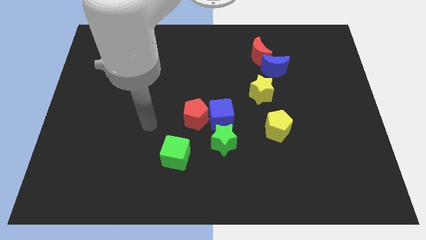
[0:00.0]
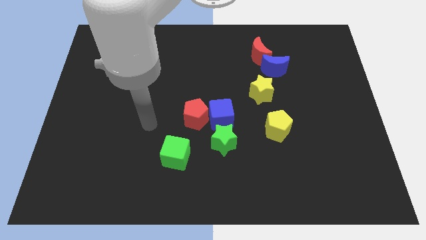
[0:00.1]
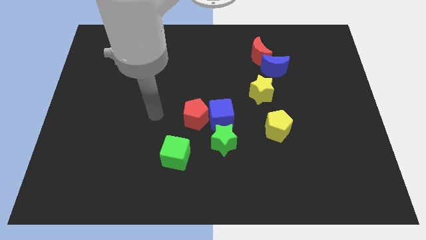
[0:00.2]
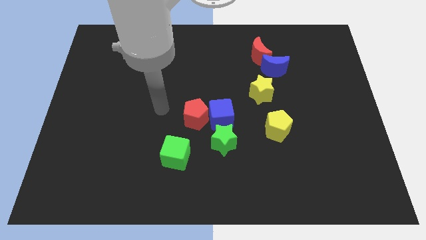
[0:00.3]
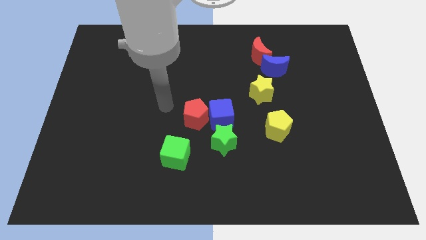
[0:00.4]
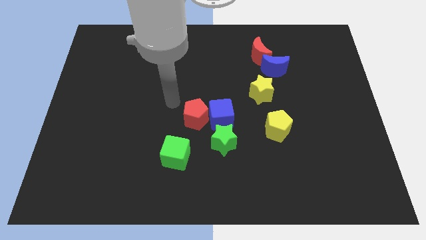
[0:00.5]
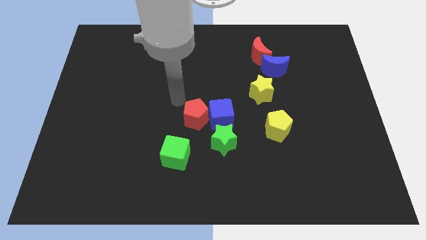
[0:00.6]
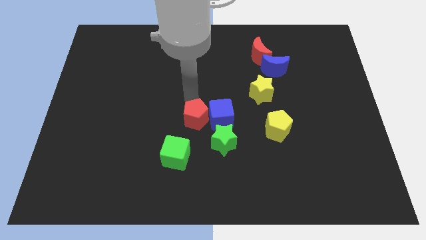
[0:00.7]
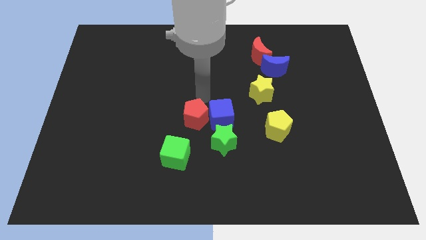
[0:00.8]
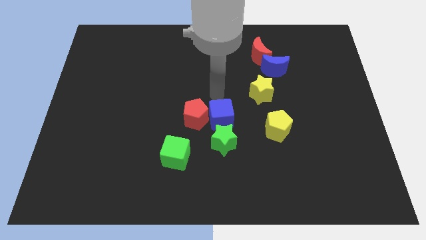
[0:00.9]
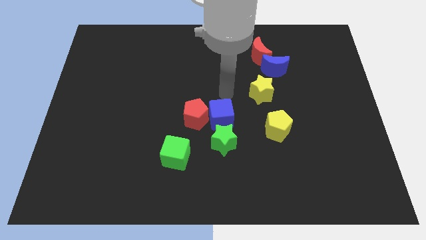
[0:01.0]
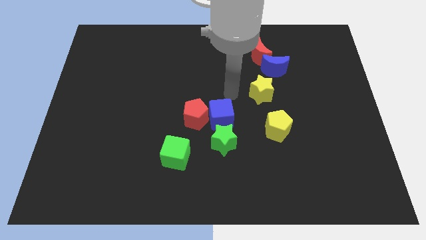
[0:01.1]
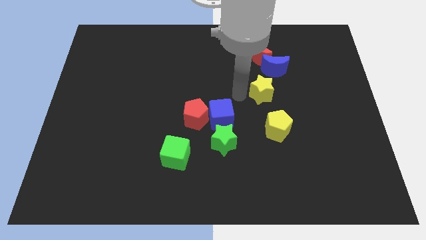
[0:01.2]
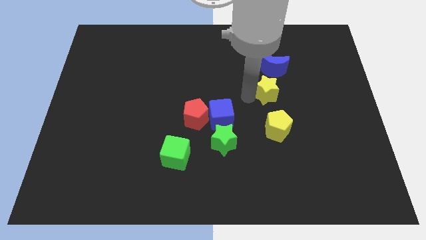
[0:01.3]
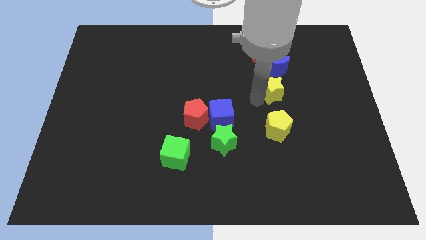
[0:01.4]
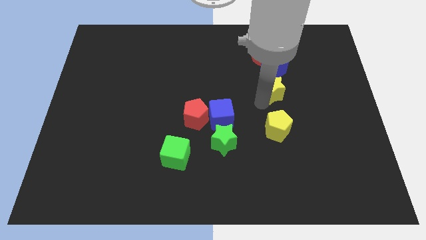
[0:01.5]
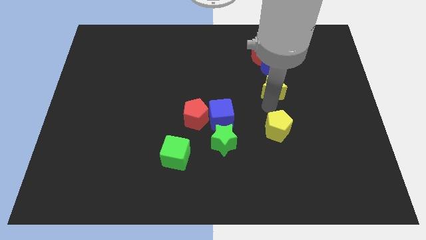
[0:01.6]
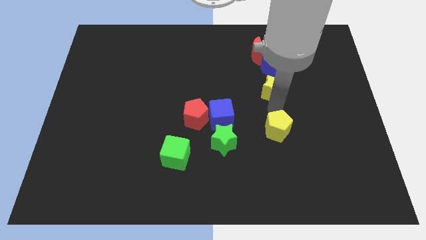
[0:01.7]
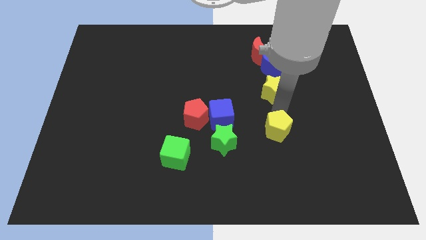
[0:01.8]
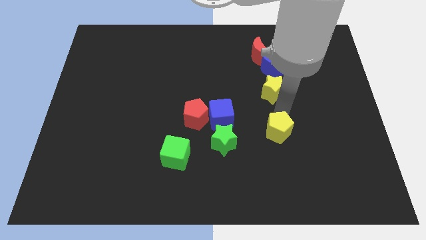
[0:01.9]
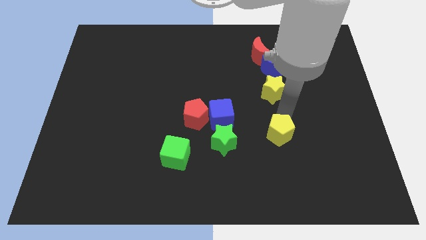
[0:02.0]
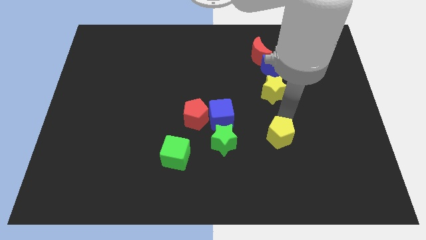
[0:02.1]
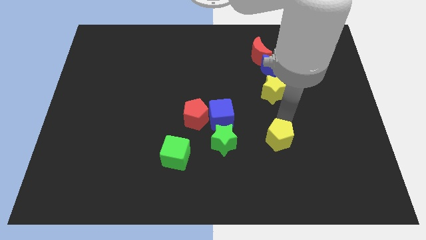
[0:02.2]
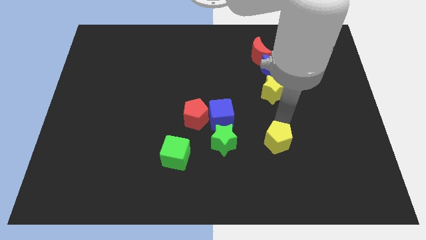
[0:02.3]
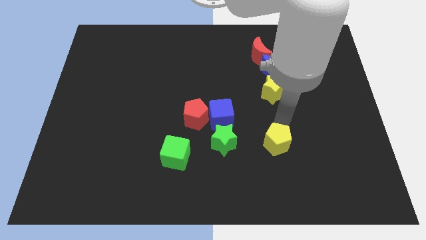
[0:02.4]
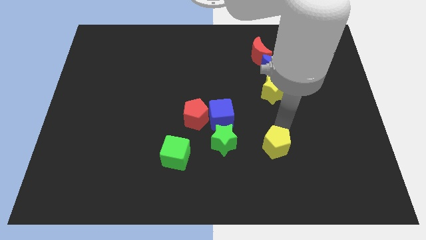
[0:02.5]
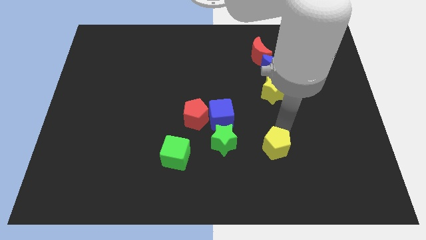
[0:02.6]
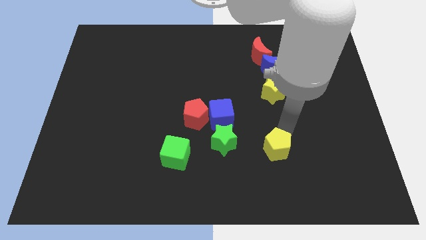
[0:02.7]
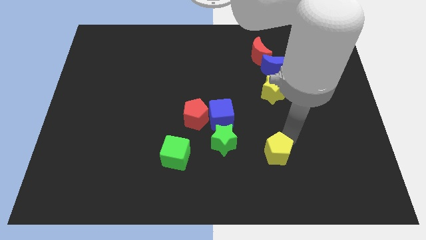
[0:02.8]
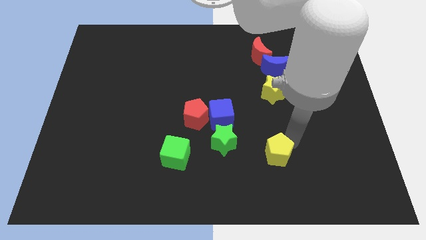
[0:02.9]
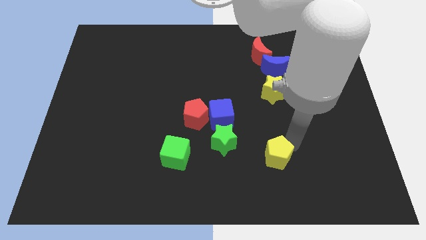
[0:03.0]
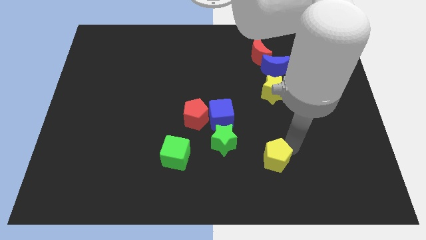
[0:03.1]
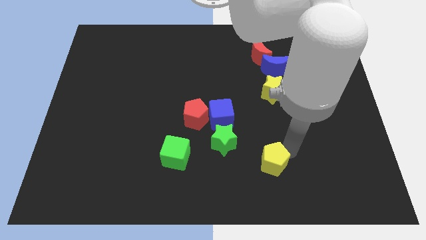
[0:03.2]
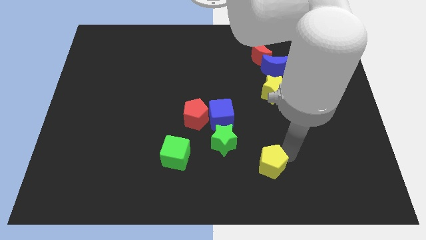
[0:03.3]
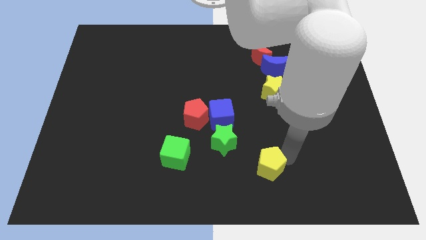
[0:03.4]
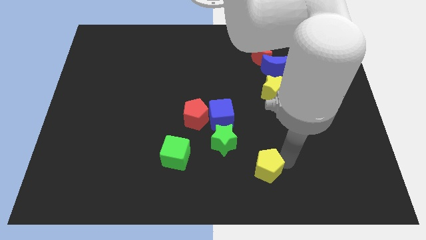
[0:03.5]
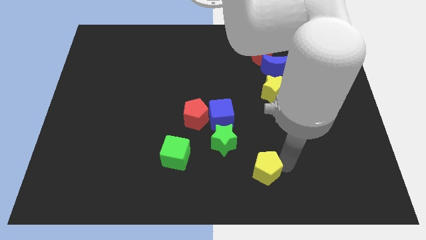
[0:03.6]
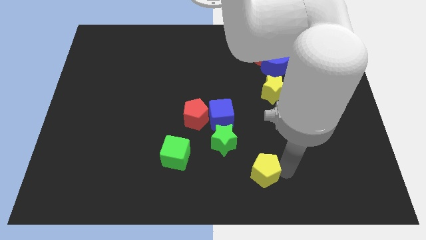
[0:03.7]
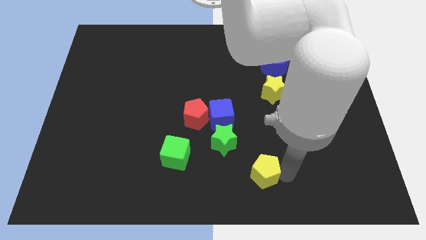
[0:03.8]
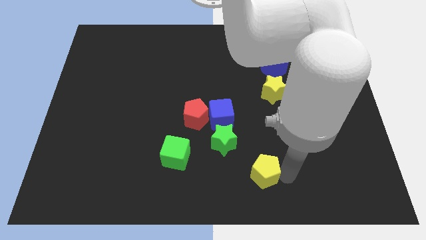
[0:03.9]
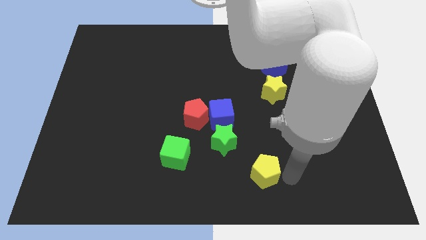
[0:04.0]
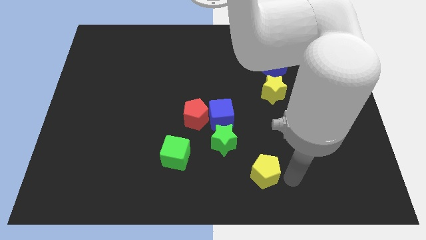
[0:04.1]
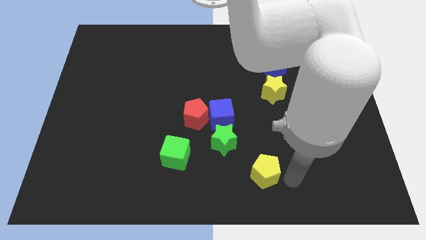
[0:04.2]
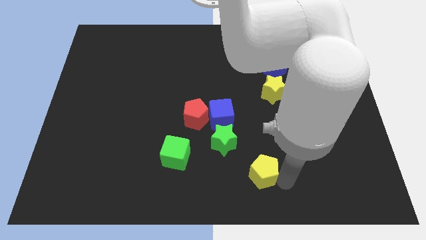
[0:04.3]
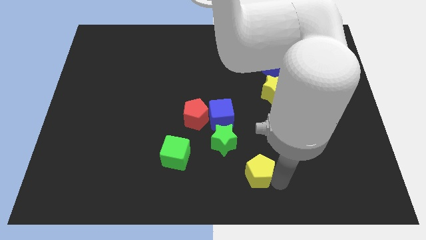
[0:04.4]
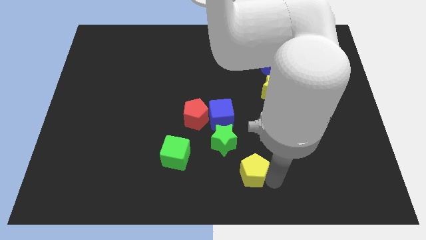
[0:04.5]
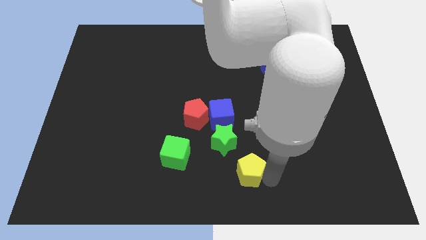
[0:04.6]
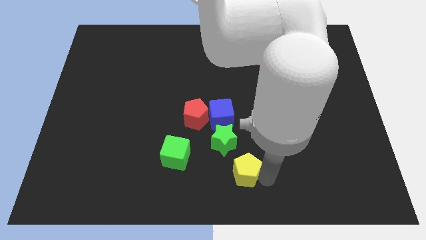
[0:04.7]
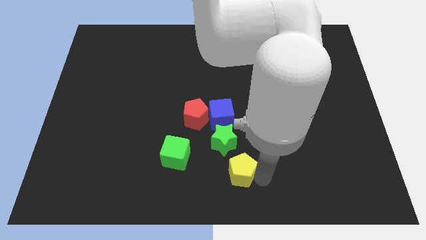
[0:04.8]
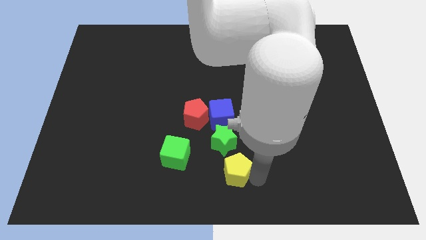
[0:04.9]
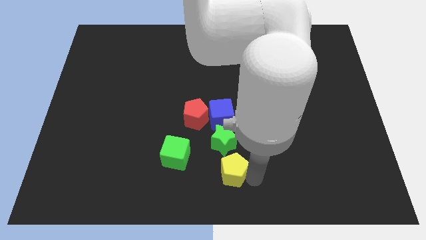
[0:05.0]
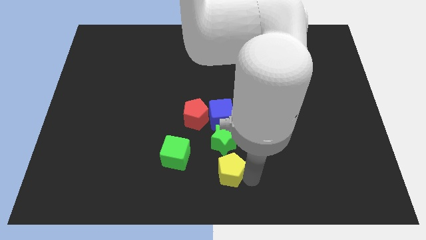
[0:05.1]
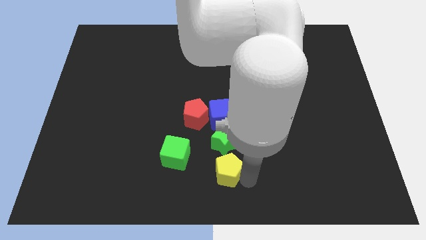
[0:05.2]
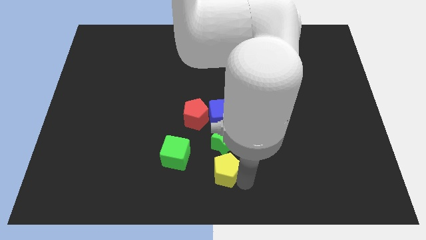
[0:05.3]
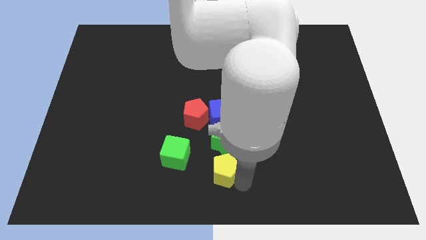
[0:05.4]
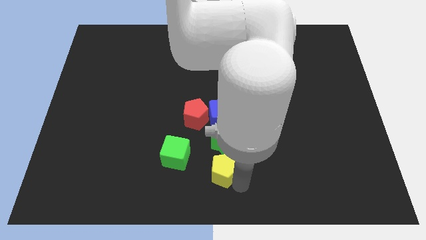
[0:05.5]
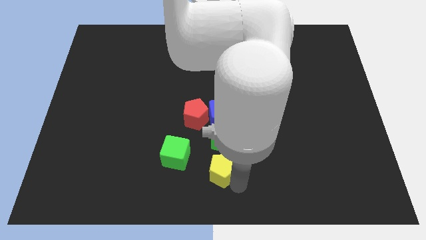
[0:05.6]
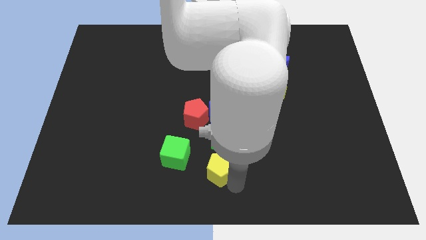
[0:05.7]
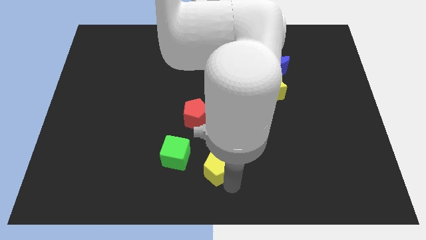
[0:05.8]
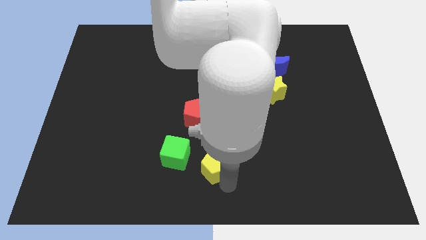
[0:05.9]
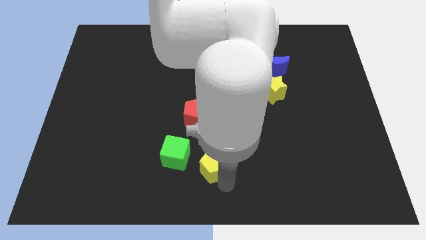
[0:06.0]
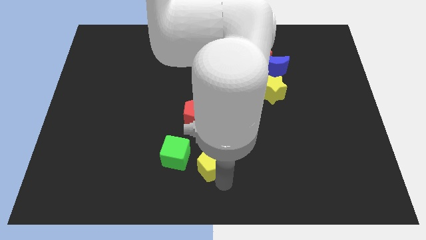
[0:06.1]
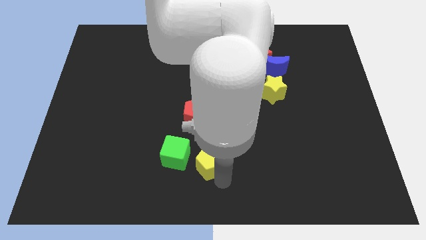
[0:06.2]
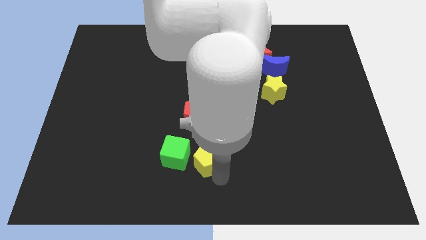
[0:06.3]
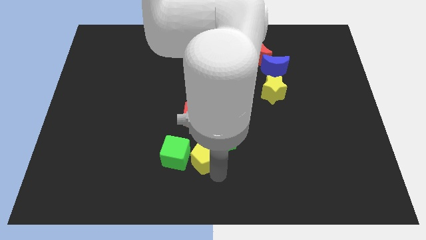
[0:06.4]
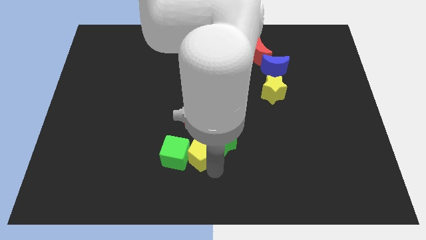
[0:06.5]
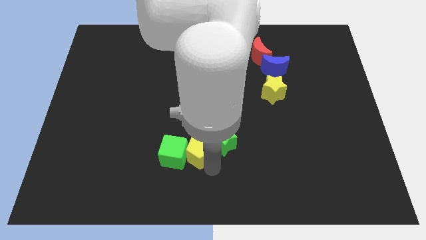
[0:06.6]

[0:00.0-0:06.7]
push the yellow pentagon close to the green cube

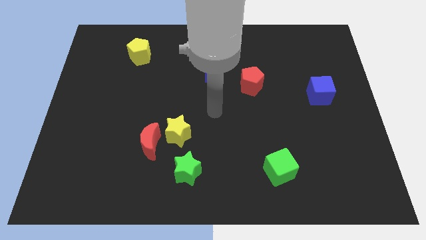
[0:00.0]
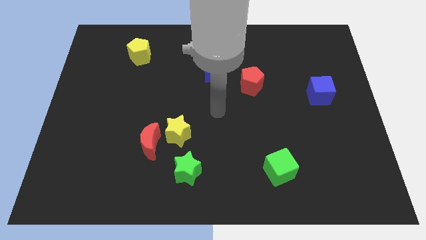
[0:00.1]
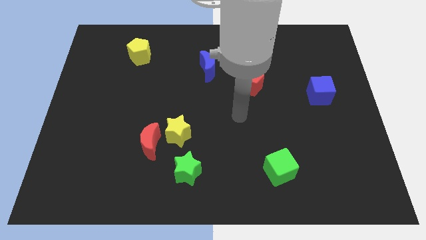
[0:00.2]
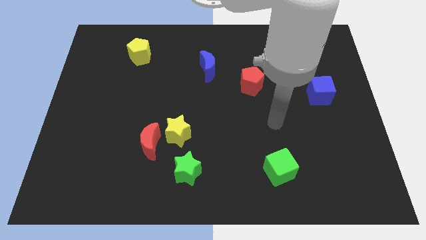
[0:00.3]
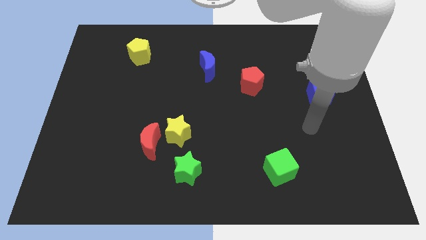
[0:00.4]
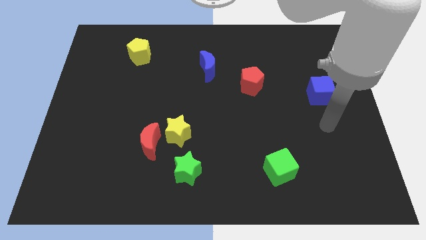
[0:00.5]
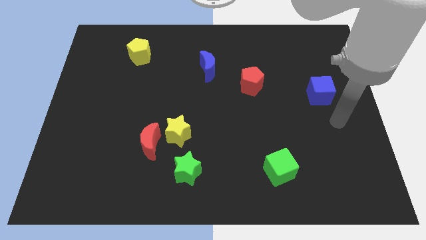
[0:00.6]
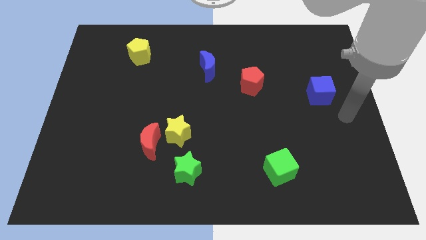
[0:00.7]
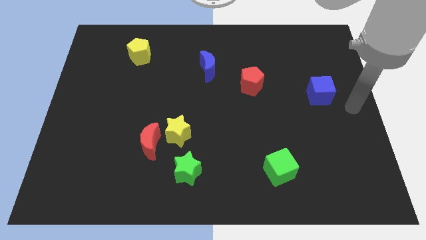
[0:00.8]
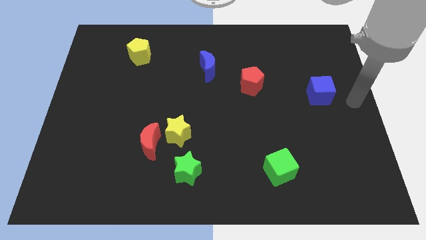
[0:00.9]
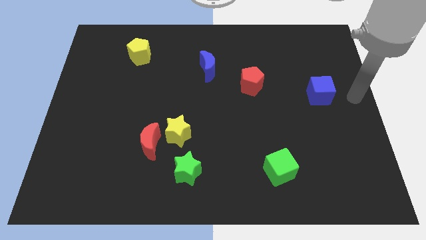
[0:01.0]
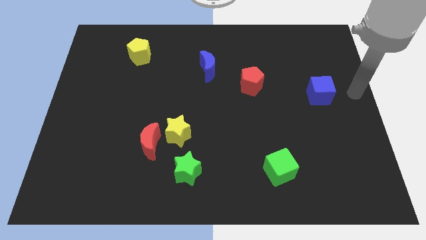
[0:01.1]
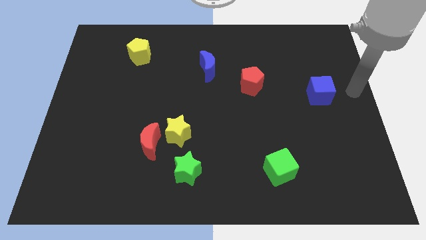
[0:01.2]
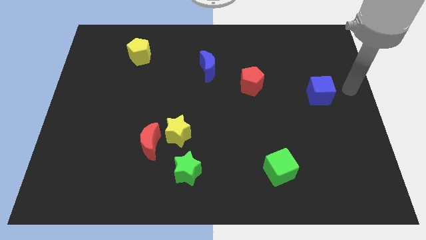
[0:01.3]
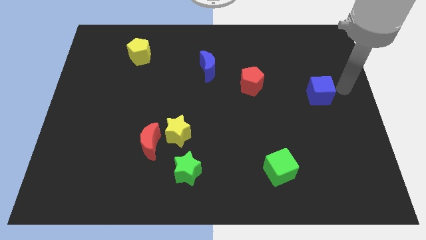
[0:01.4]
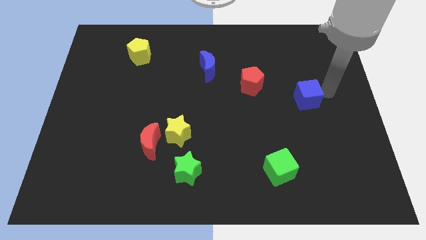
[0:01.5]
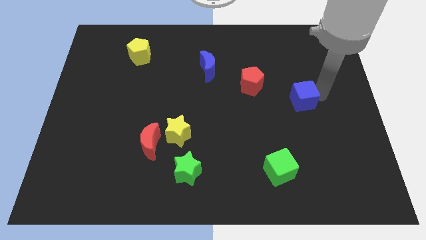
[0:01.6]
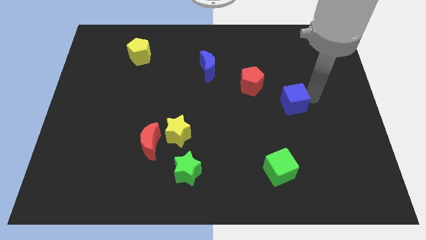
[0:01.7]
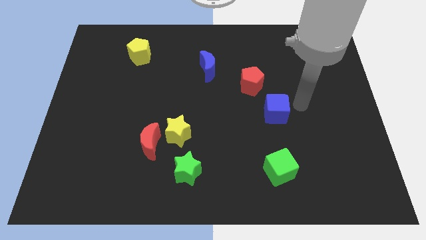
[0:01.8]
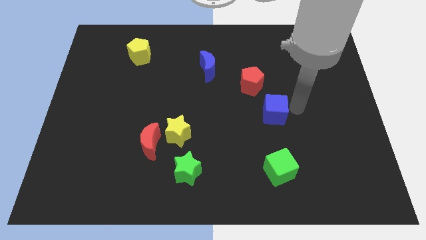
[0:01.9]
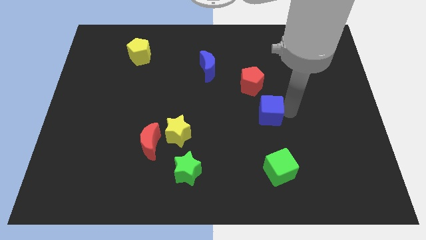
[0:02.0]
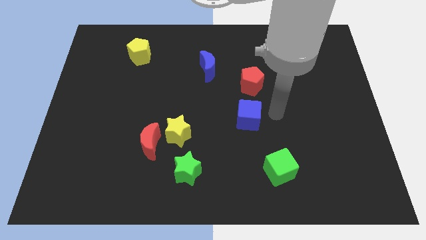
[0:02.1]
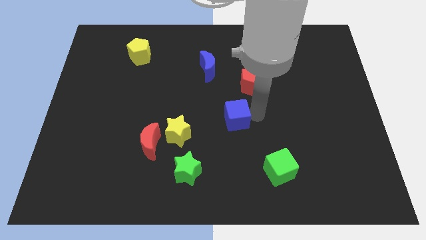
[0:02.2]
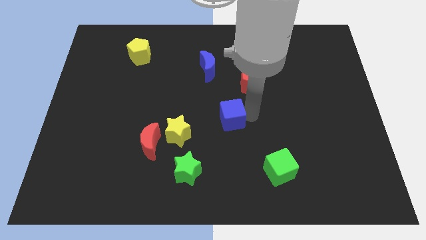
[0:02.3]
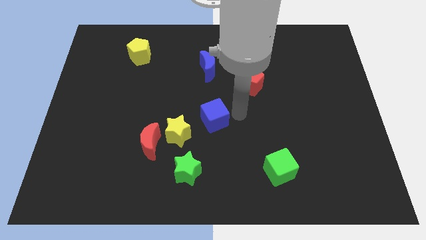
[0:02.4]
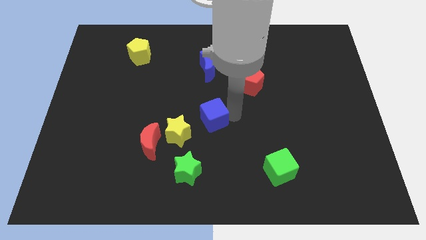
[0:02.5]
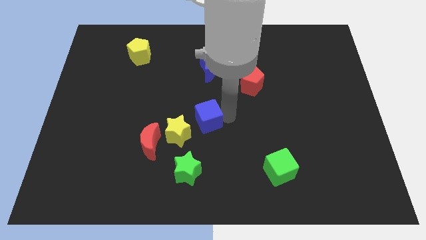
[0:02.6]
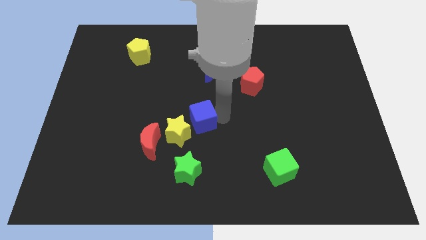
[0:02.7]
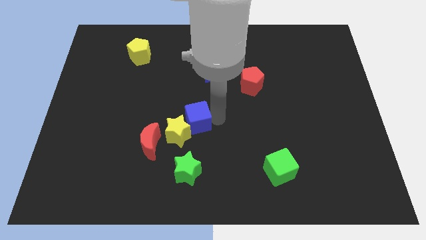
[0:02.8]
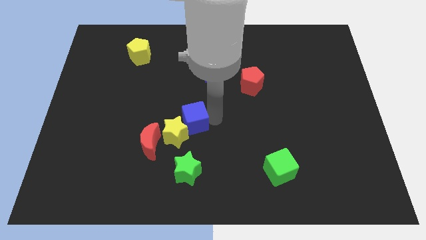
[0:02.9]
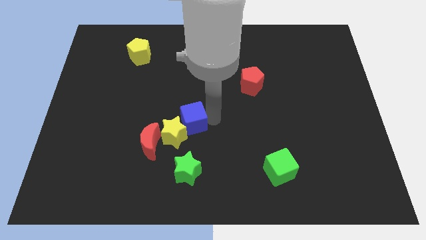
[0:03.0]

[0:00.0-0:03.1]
slide the blue cube to the yellow star
